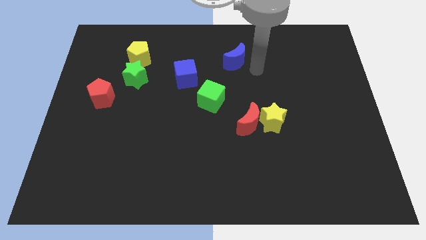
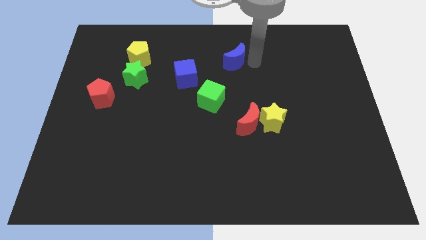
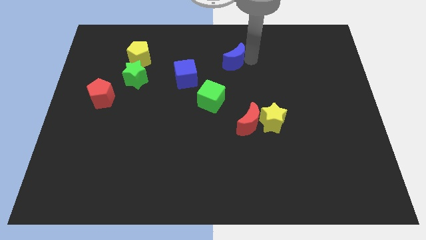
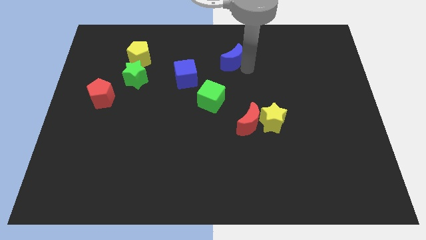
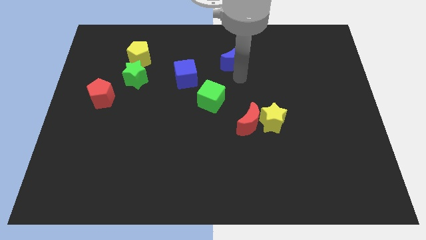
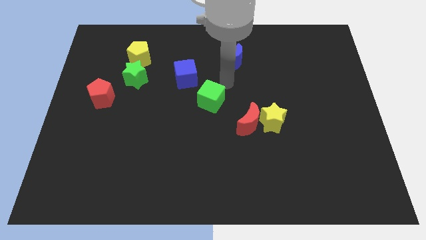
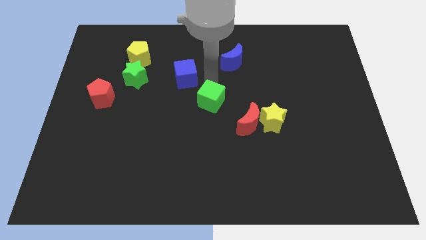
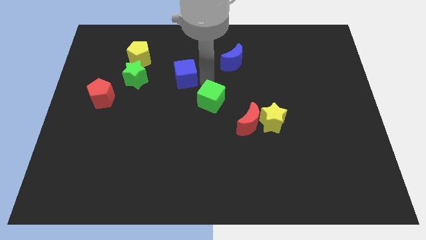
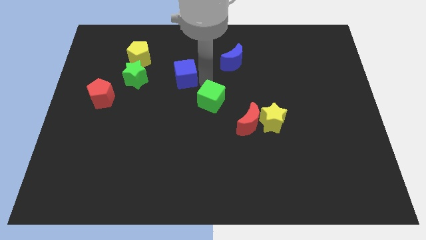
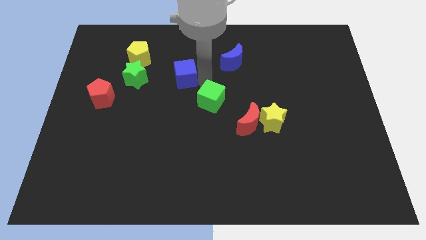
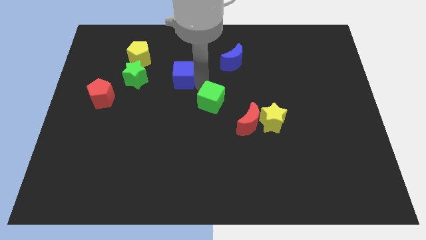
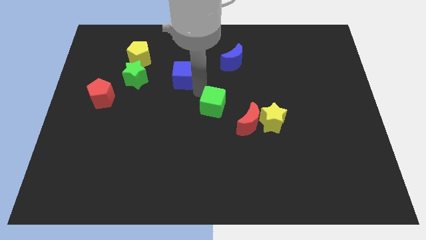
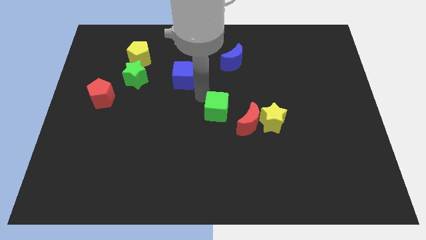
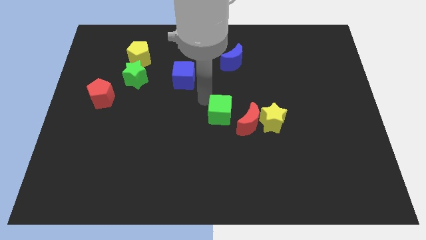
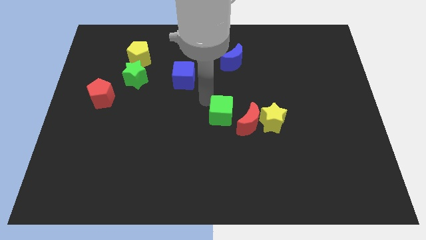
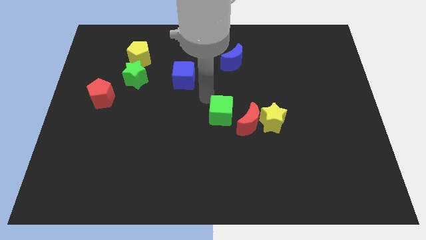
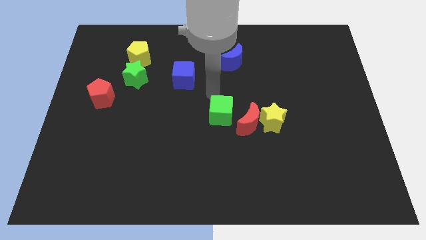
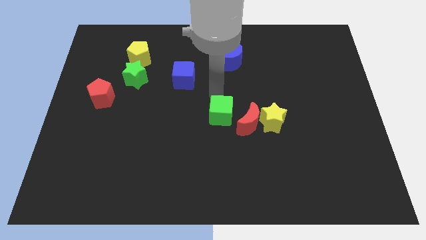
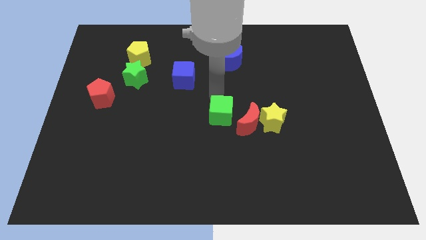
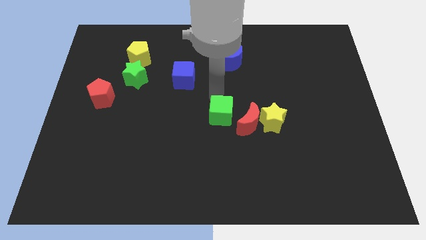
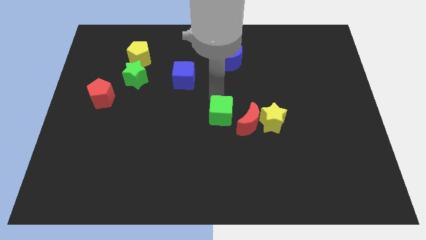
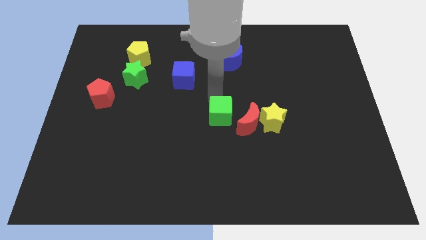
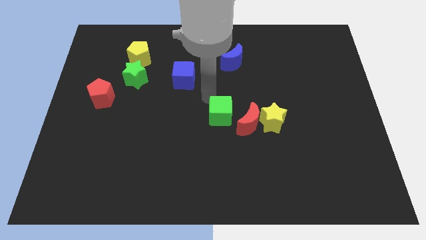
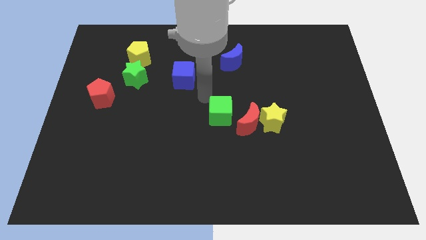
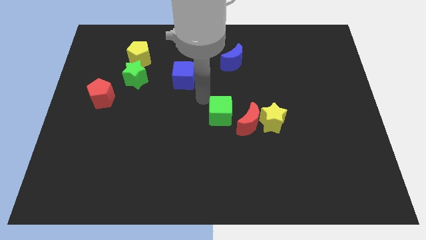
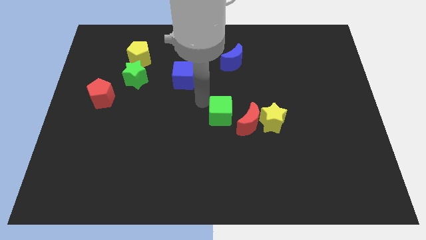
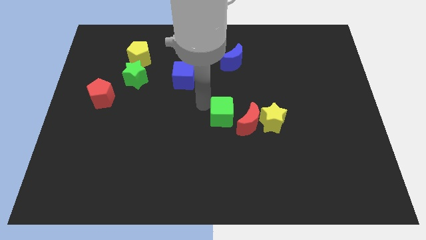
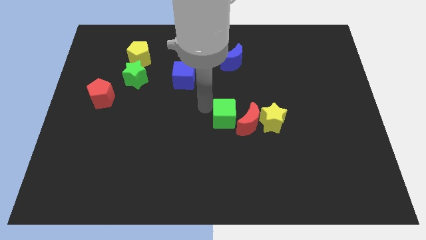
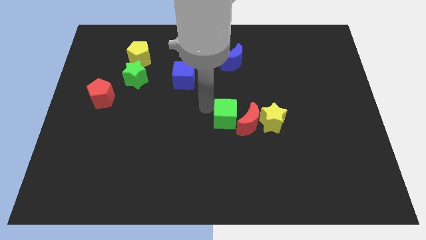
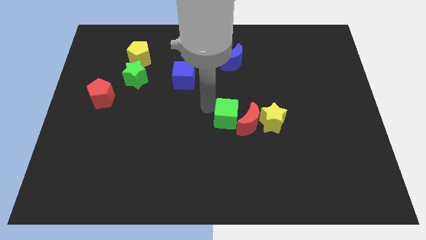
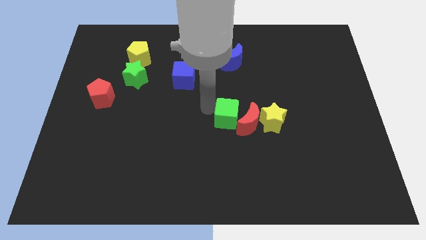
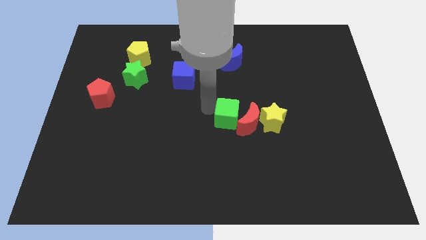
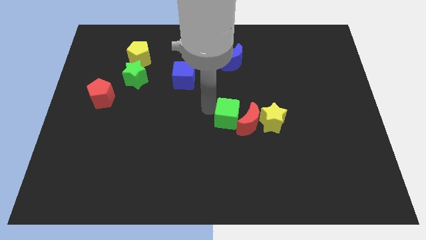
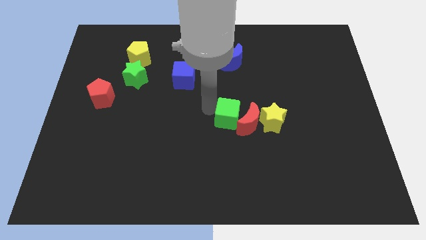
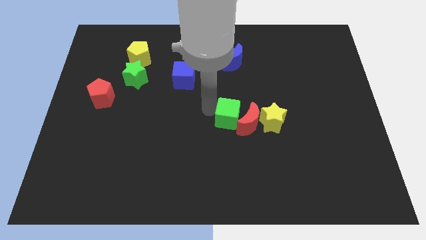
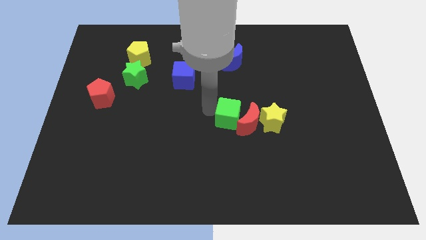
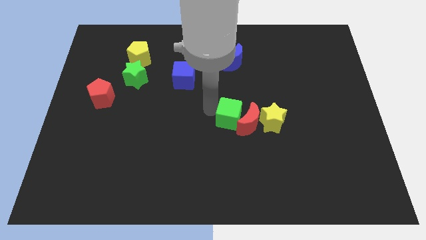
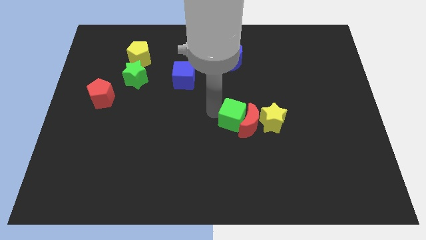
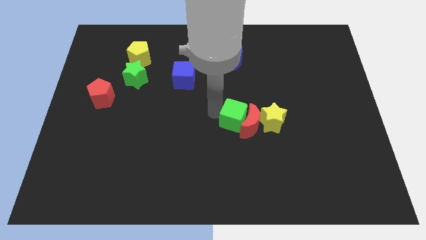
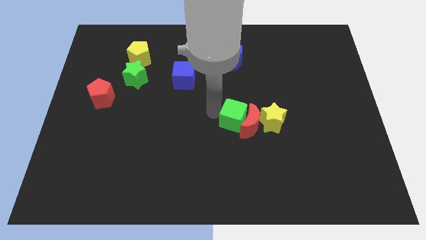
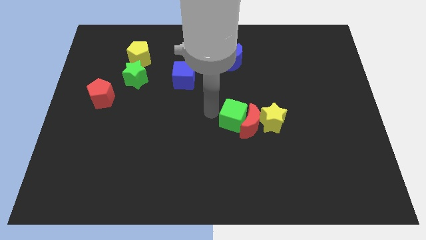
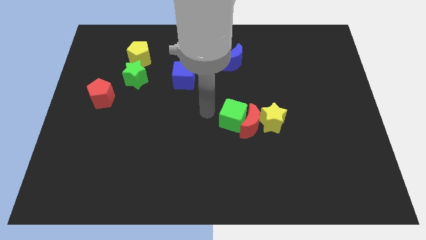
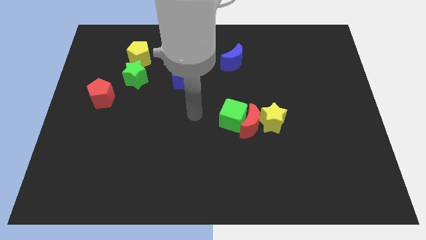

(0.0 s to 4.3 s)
move the green cube into the red crescent

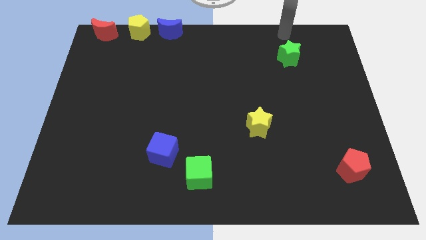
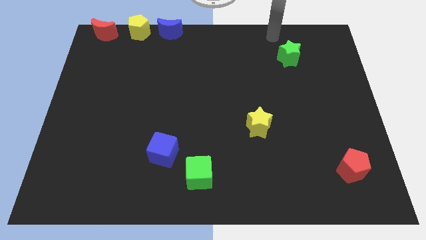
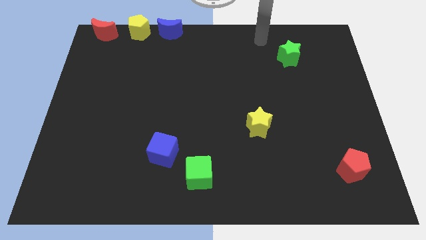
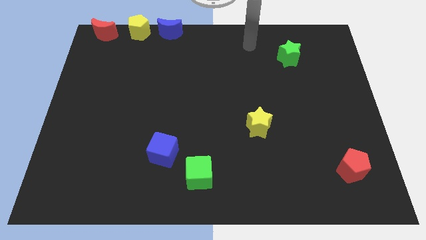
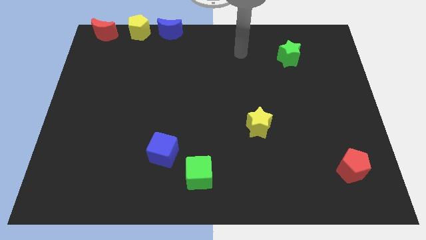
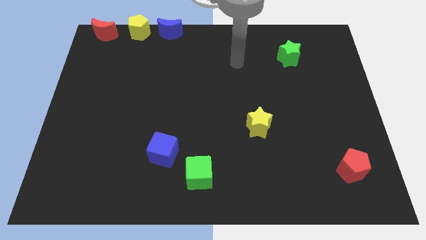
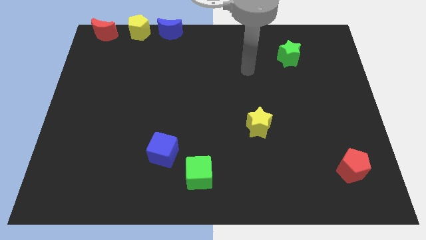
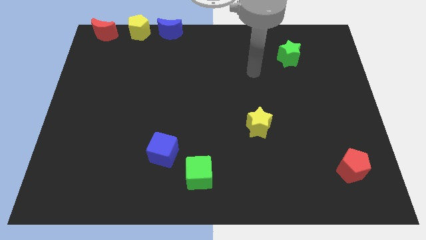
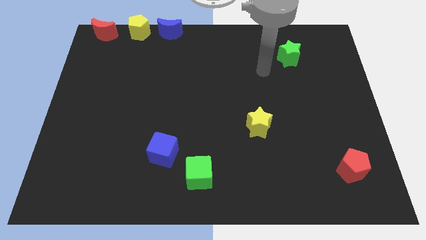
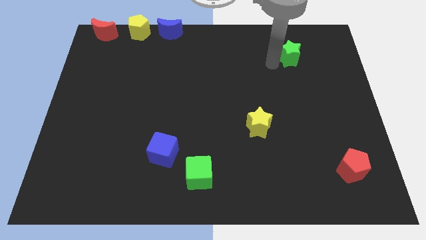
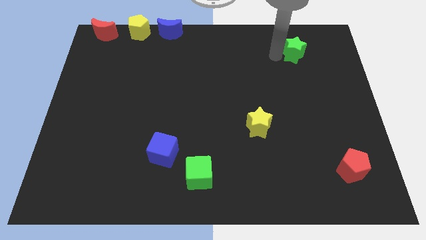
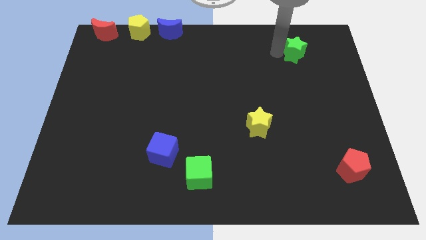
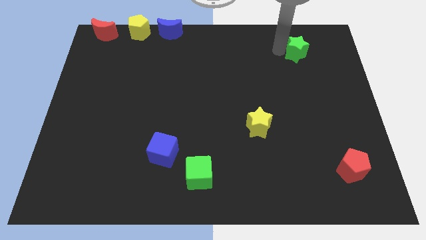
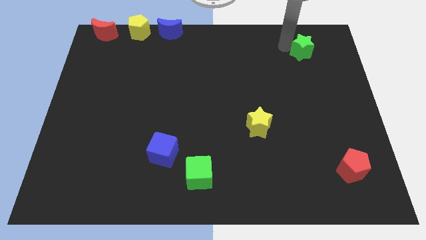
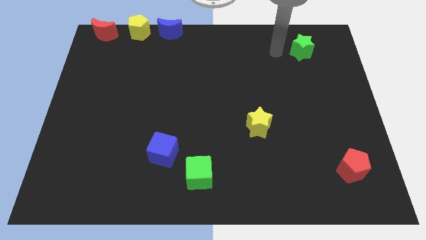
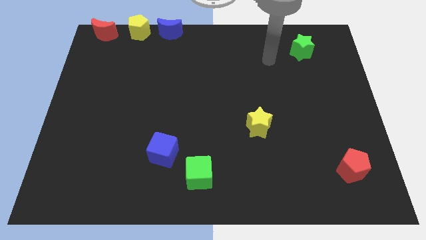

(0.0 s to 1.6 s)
place green star right diagonally towards right top corner of the board

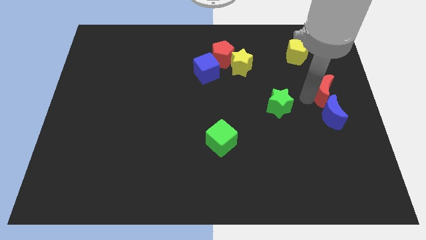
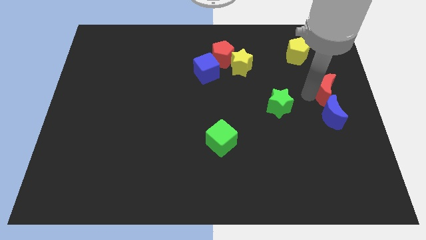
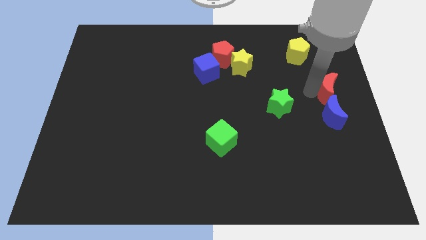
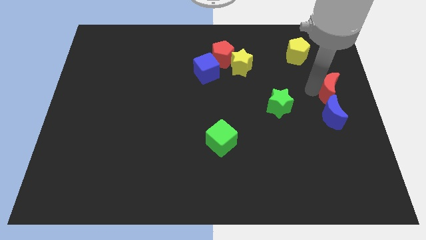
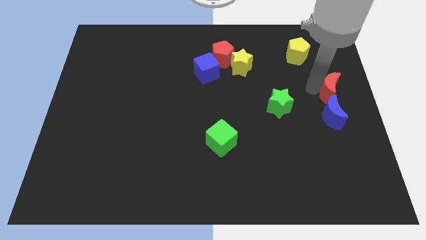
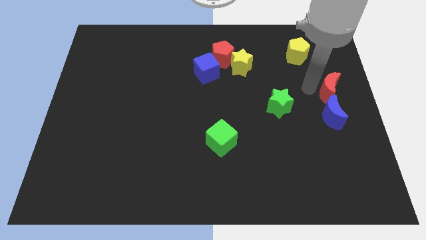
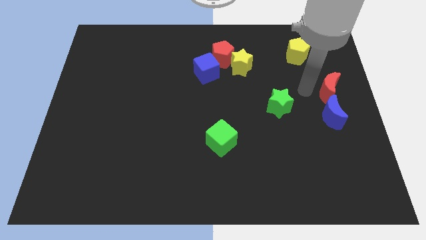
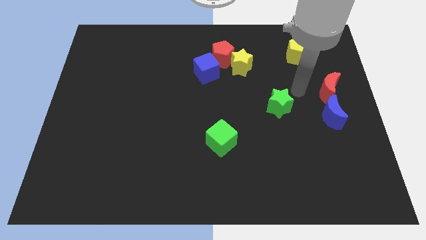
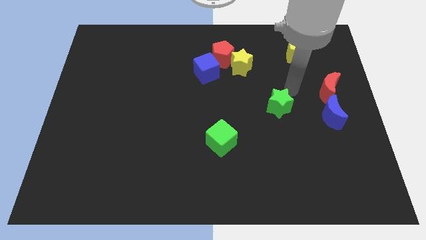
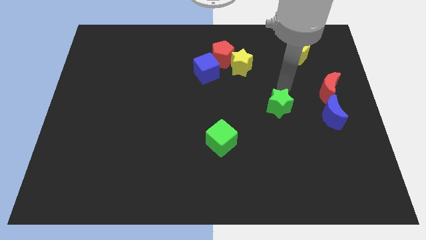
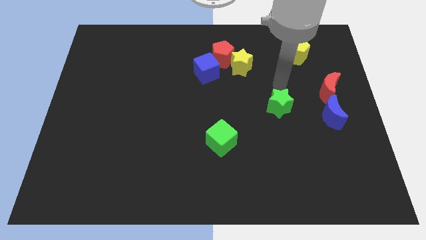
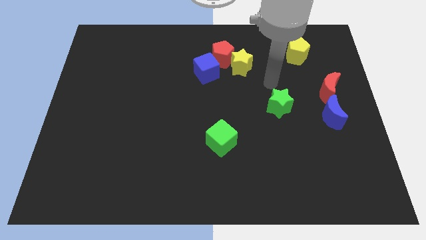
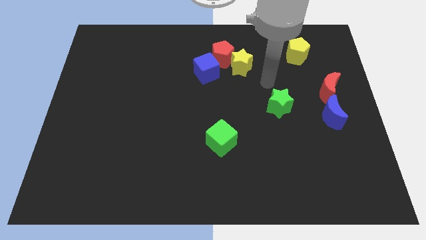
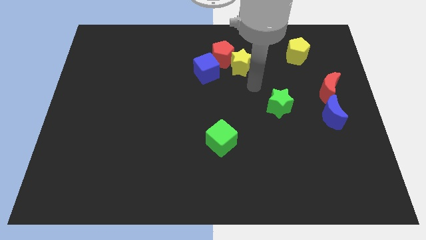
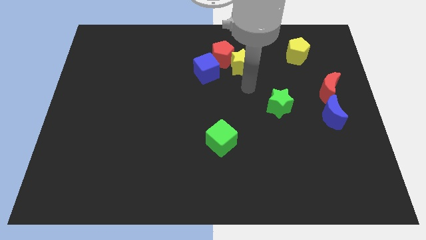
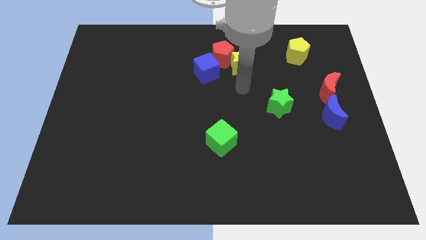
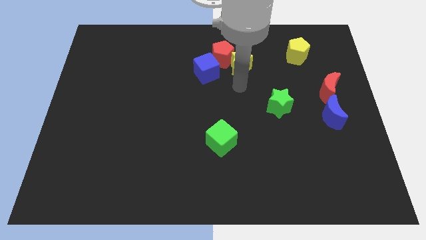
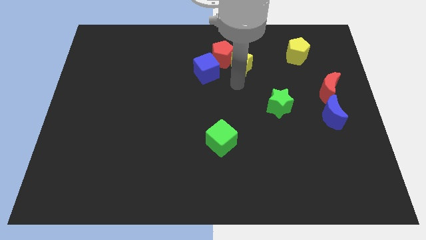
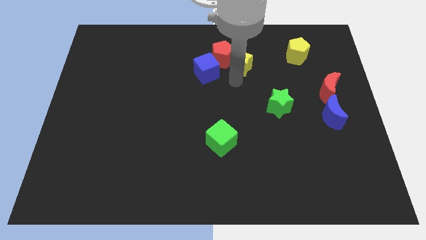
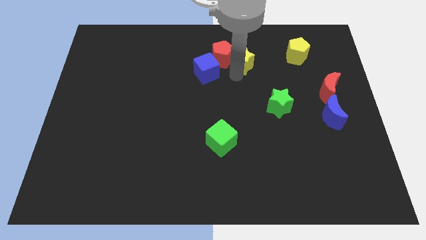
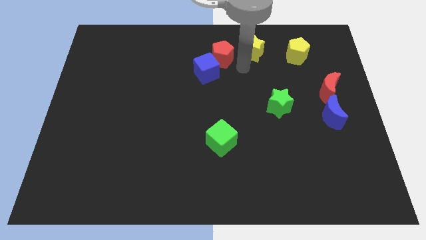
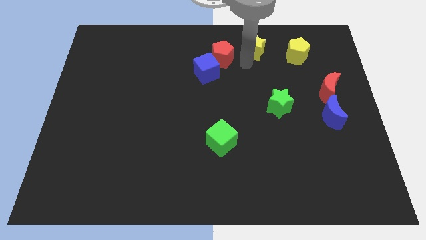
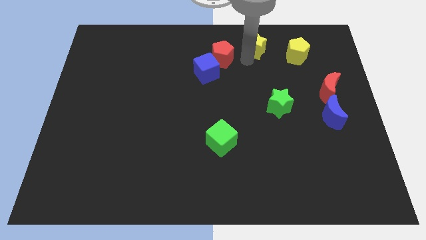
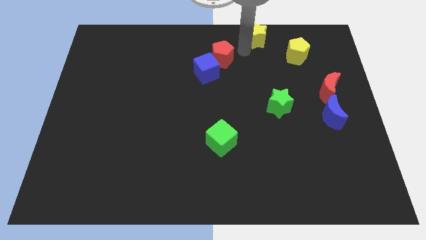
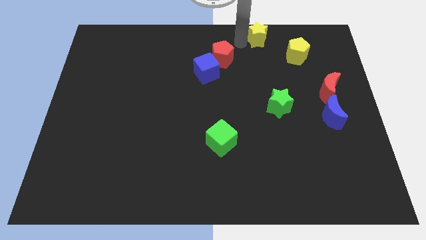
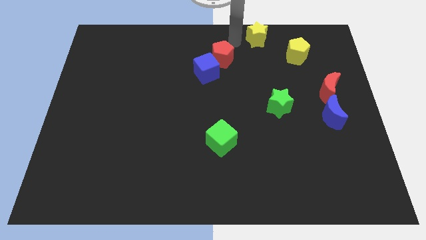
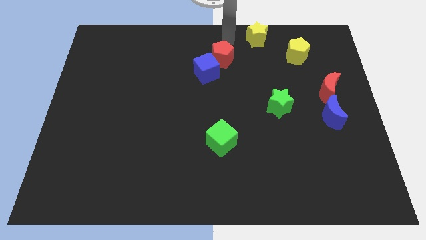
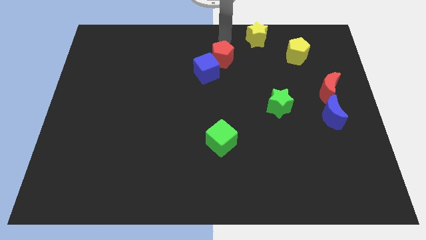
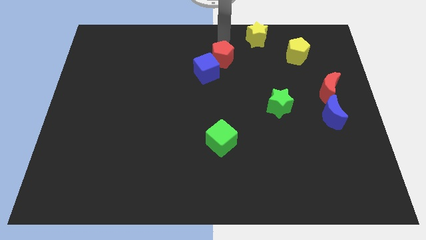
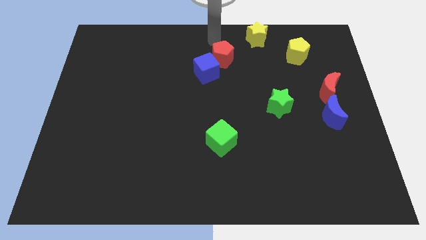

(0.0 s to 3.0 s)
move the yellow star to the top center
